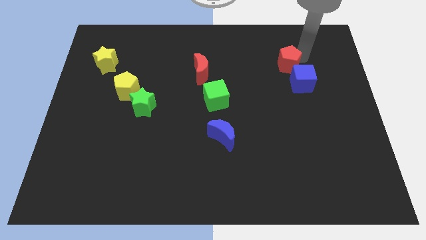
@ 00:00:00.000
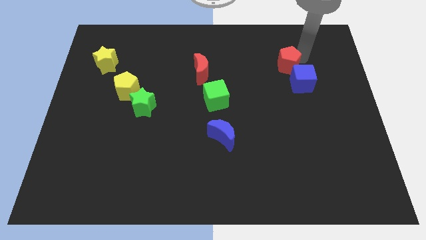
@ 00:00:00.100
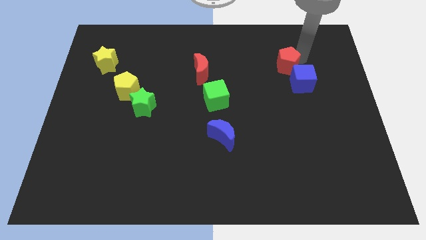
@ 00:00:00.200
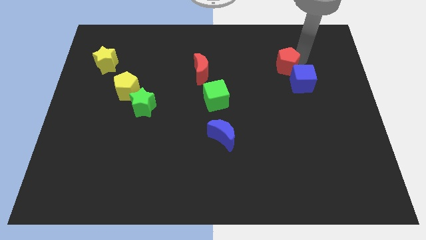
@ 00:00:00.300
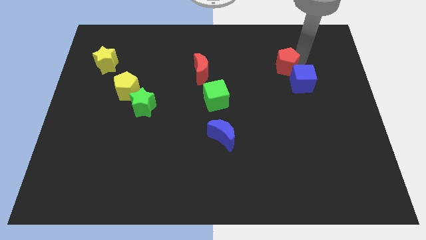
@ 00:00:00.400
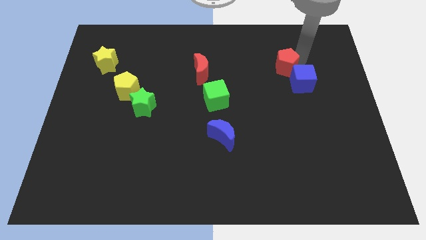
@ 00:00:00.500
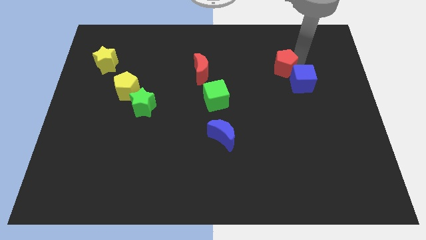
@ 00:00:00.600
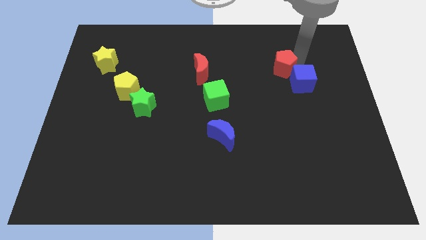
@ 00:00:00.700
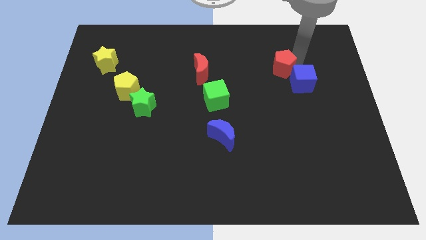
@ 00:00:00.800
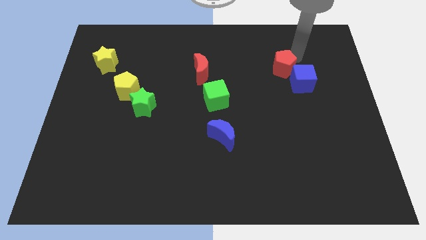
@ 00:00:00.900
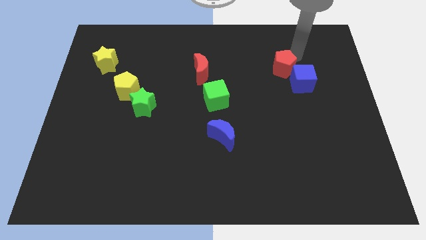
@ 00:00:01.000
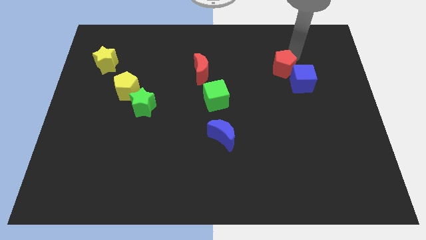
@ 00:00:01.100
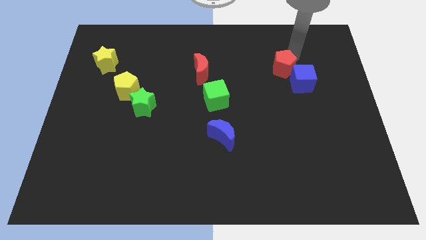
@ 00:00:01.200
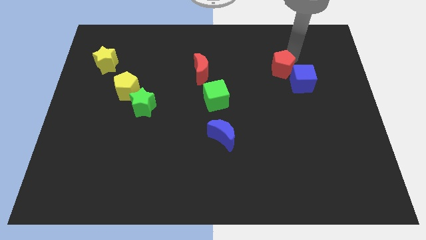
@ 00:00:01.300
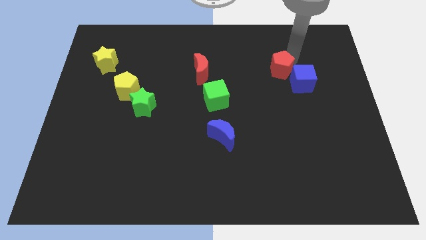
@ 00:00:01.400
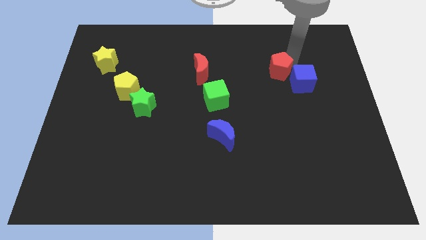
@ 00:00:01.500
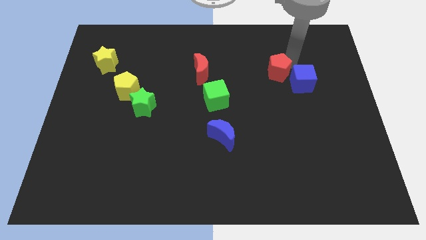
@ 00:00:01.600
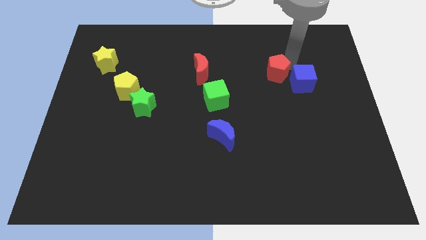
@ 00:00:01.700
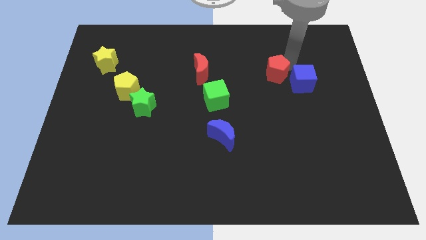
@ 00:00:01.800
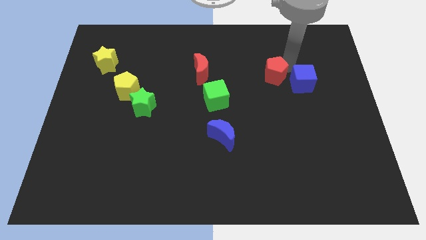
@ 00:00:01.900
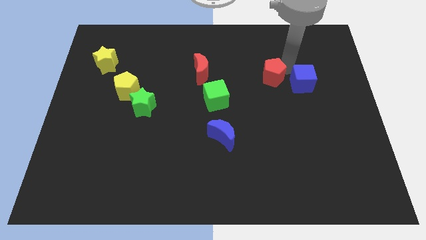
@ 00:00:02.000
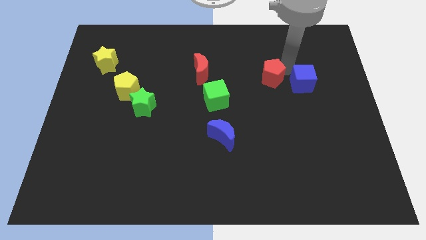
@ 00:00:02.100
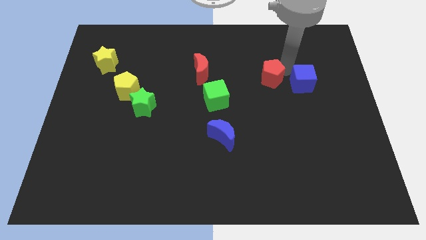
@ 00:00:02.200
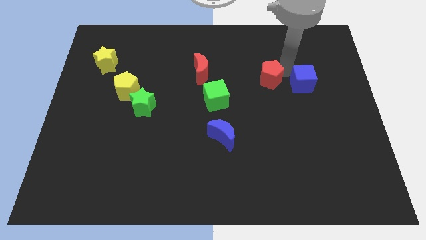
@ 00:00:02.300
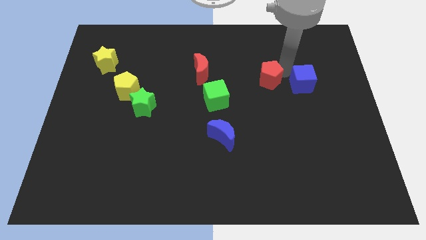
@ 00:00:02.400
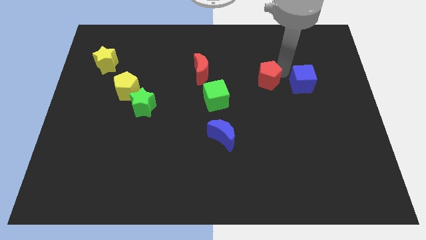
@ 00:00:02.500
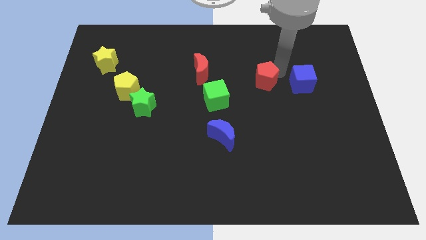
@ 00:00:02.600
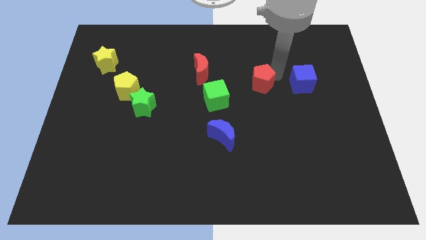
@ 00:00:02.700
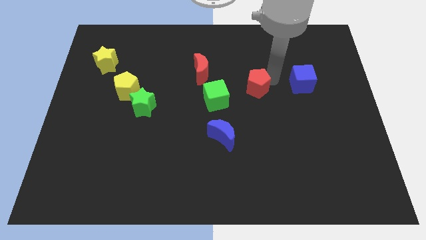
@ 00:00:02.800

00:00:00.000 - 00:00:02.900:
push the red pentagon to the parallel left of the blue cube

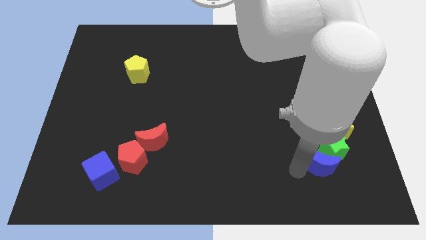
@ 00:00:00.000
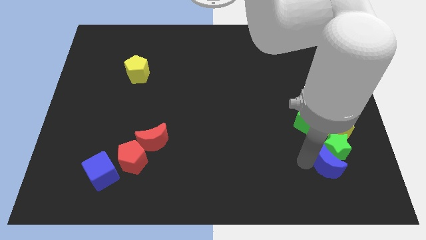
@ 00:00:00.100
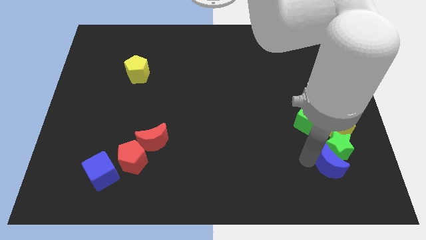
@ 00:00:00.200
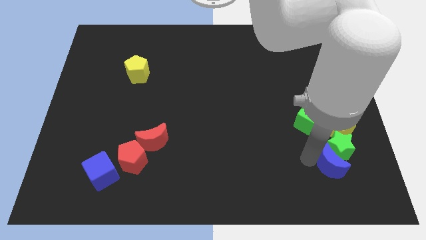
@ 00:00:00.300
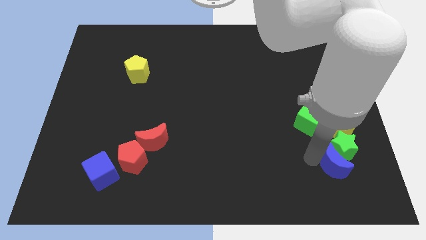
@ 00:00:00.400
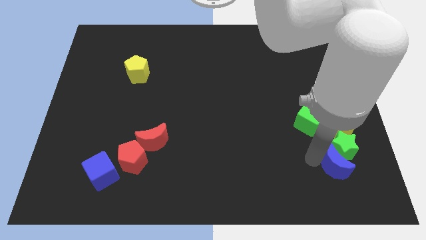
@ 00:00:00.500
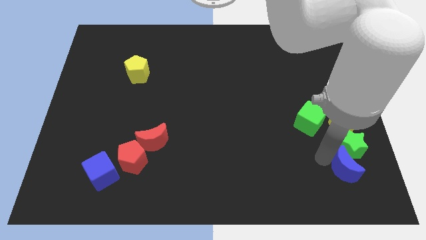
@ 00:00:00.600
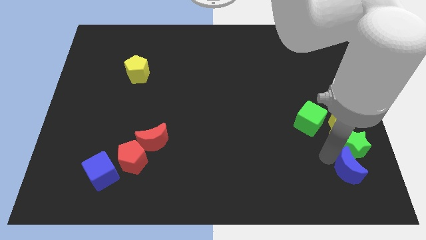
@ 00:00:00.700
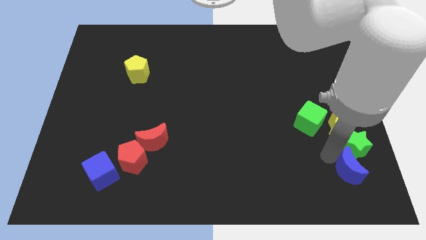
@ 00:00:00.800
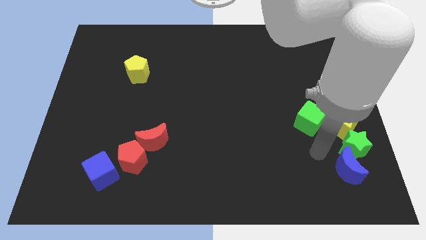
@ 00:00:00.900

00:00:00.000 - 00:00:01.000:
push the green star to the right of the board

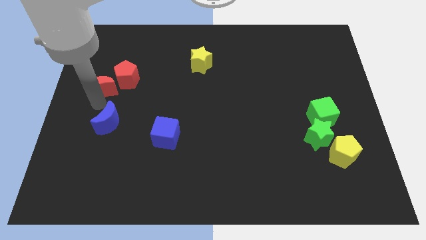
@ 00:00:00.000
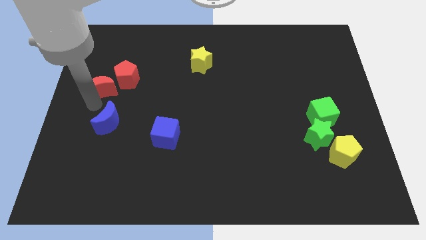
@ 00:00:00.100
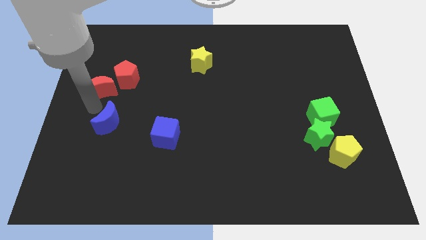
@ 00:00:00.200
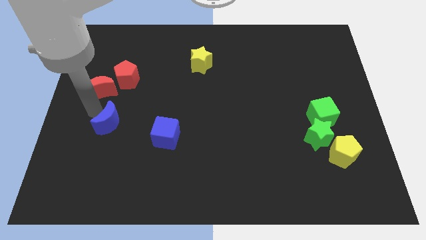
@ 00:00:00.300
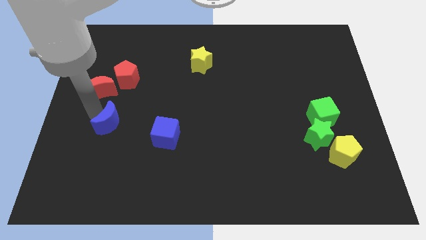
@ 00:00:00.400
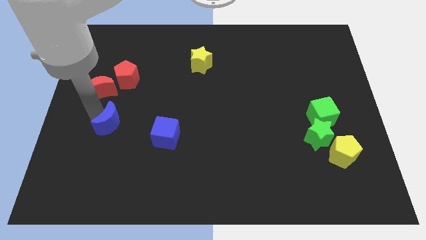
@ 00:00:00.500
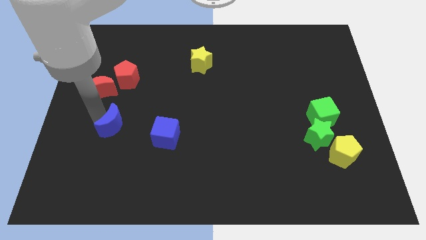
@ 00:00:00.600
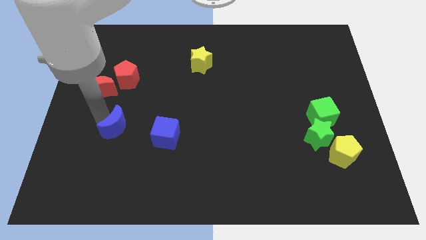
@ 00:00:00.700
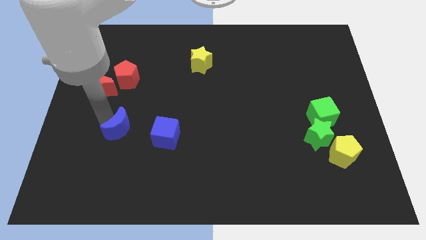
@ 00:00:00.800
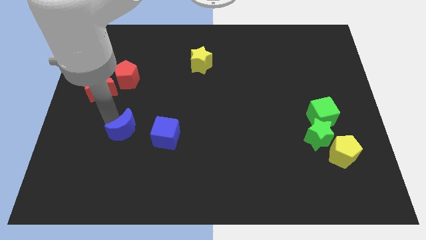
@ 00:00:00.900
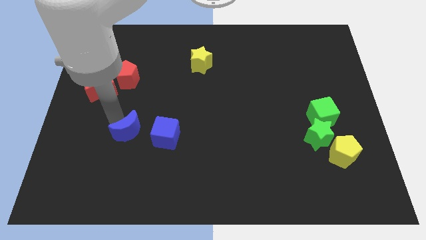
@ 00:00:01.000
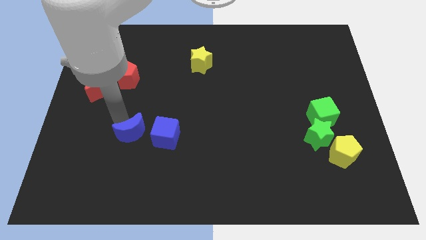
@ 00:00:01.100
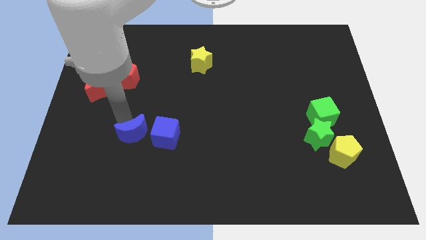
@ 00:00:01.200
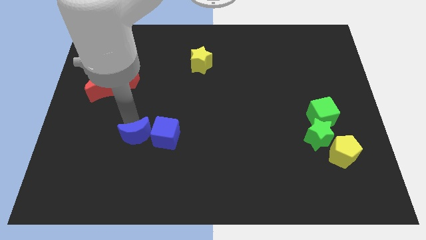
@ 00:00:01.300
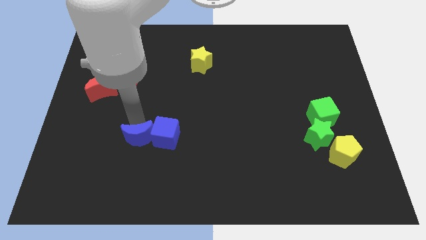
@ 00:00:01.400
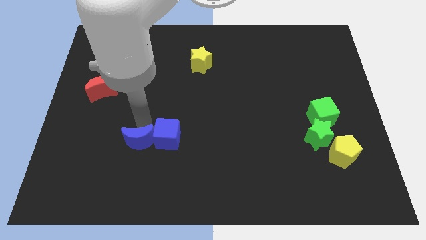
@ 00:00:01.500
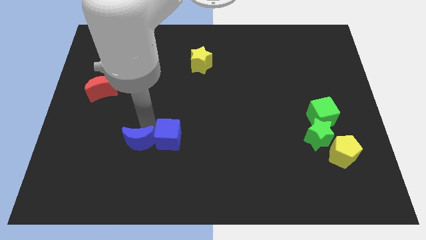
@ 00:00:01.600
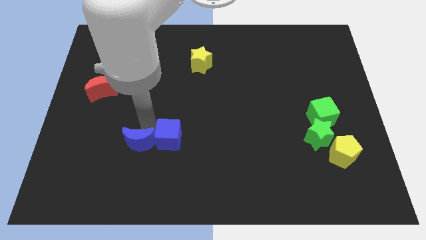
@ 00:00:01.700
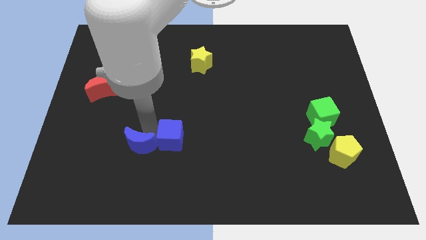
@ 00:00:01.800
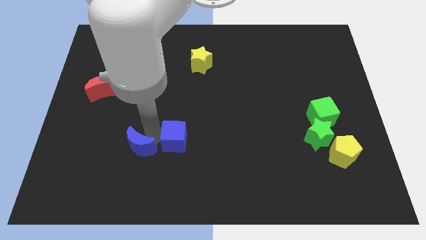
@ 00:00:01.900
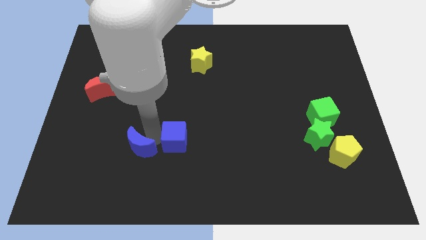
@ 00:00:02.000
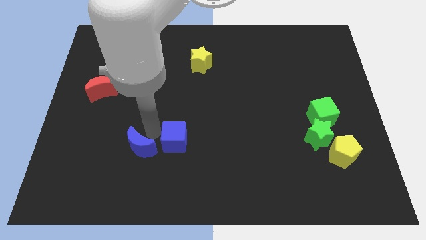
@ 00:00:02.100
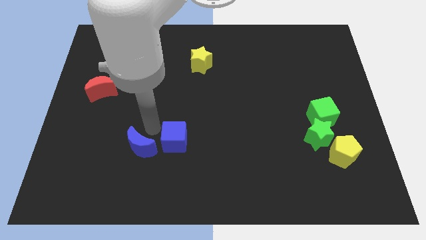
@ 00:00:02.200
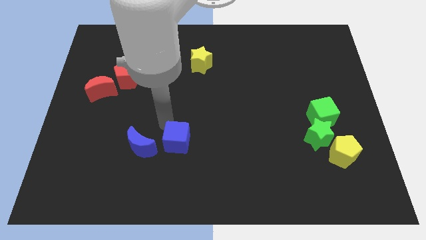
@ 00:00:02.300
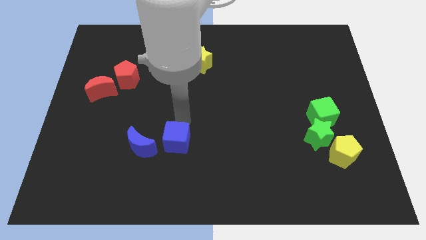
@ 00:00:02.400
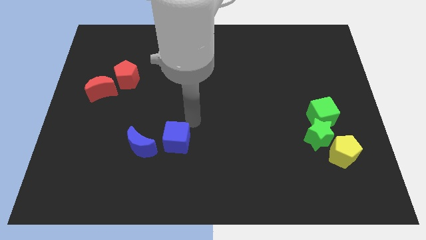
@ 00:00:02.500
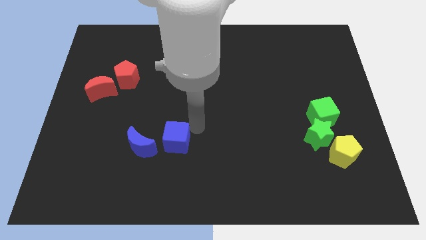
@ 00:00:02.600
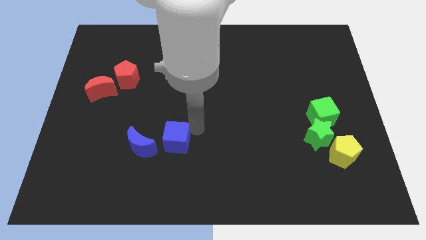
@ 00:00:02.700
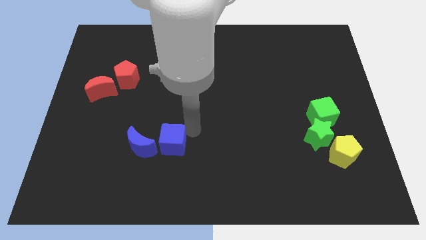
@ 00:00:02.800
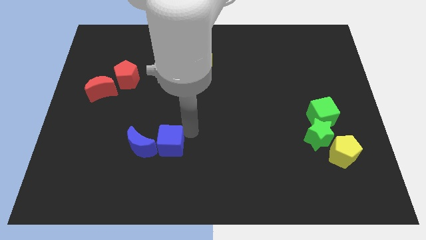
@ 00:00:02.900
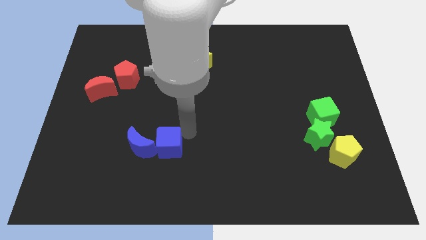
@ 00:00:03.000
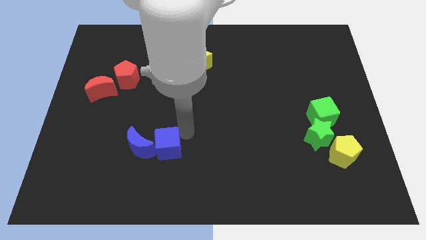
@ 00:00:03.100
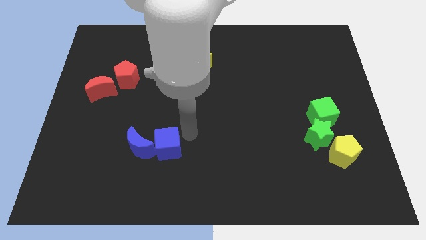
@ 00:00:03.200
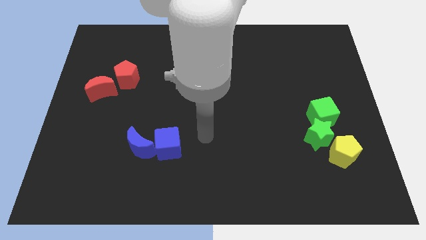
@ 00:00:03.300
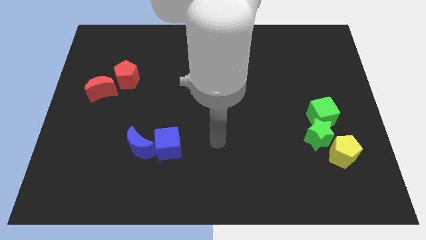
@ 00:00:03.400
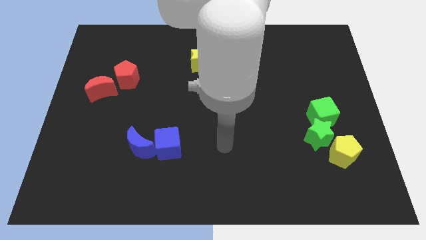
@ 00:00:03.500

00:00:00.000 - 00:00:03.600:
move the blue cube into the blue moon

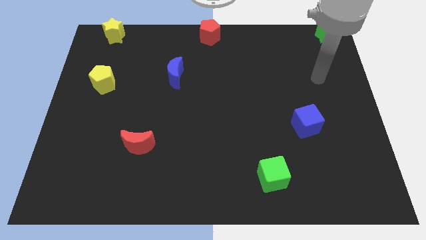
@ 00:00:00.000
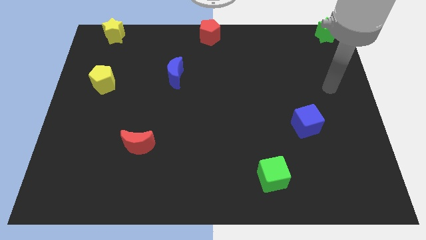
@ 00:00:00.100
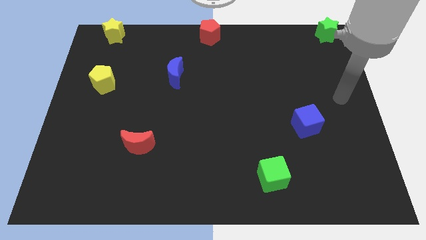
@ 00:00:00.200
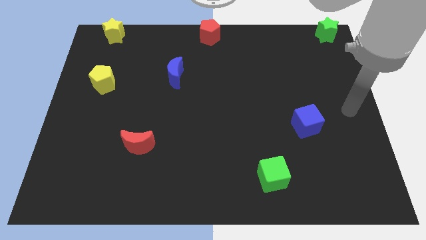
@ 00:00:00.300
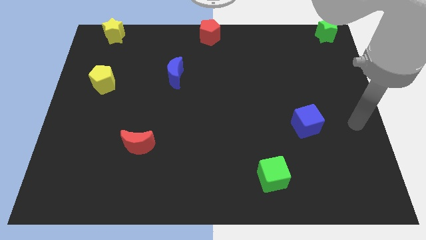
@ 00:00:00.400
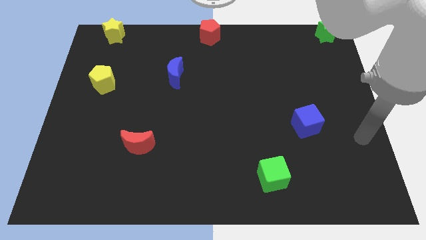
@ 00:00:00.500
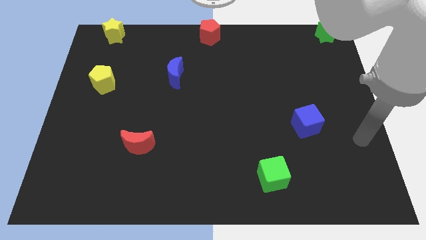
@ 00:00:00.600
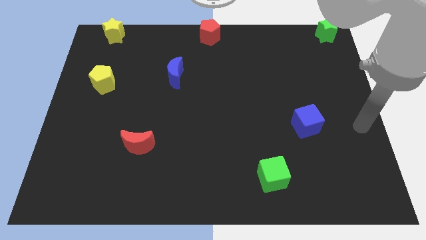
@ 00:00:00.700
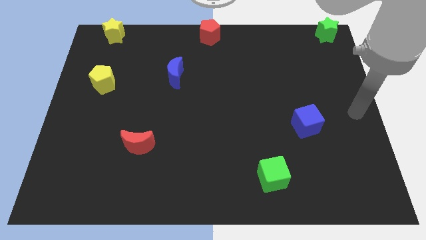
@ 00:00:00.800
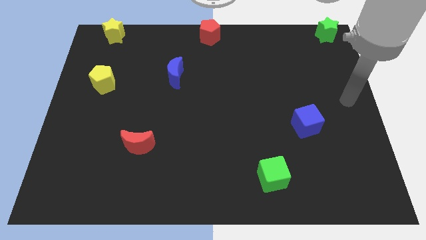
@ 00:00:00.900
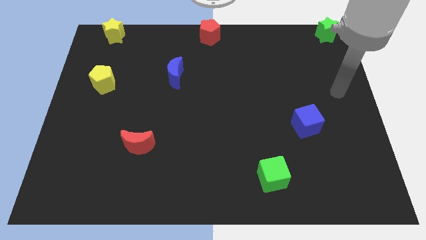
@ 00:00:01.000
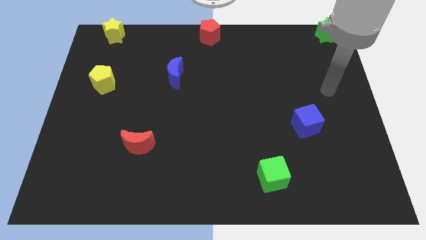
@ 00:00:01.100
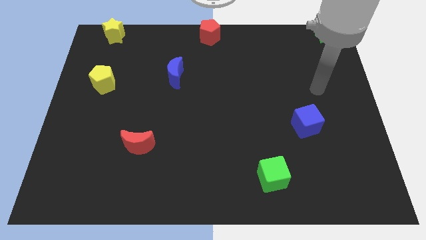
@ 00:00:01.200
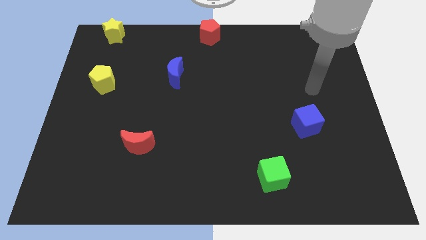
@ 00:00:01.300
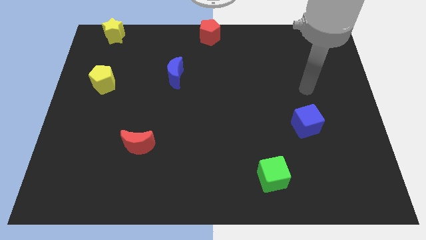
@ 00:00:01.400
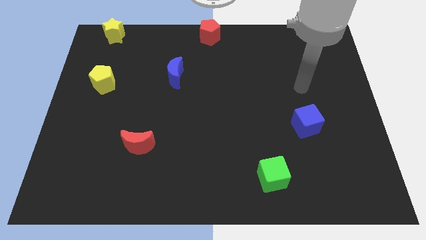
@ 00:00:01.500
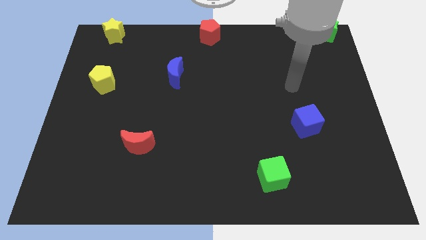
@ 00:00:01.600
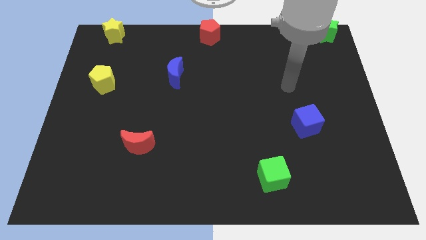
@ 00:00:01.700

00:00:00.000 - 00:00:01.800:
move your arm away from the green star
